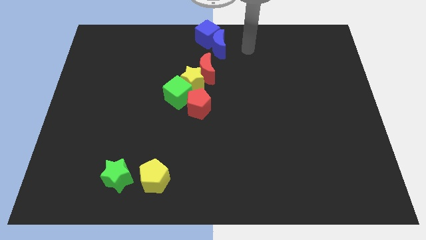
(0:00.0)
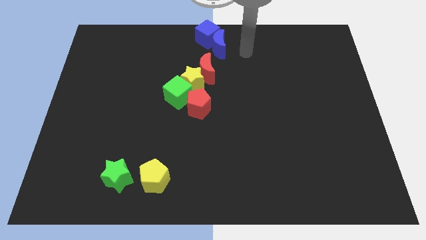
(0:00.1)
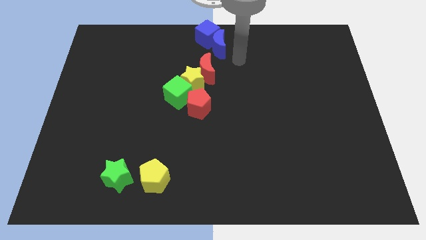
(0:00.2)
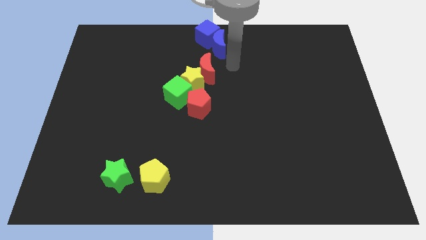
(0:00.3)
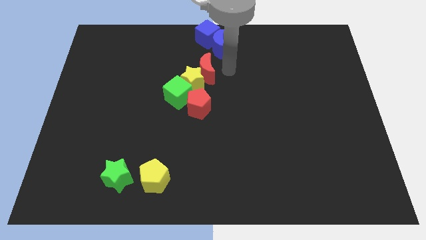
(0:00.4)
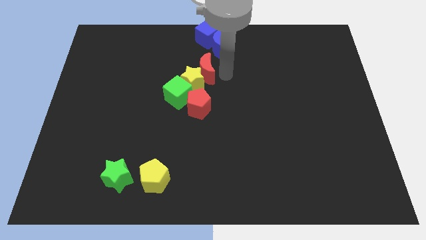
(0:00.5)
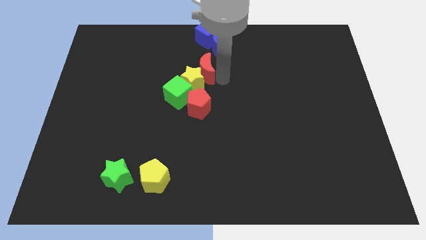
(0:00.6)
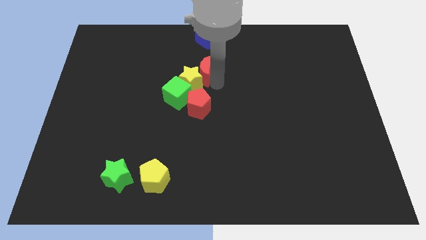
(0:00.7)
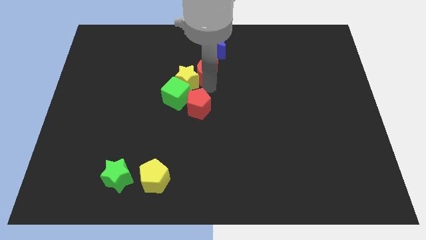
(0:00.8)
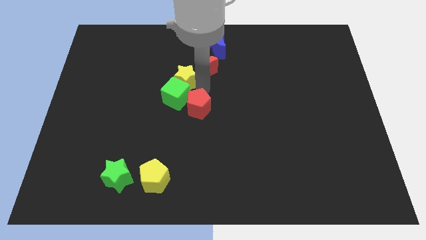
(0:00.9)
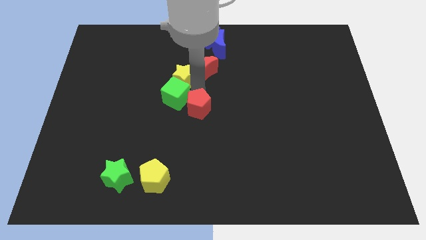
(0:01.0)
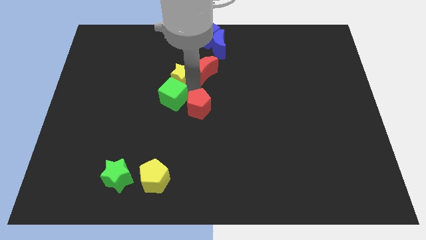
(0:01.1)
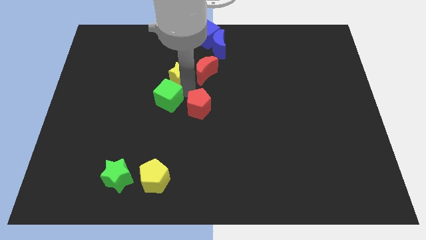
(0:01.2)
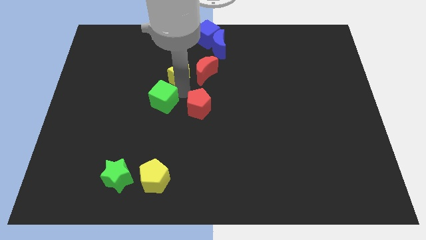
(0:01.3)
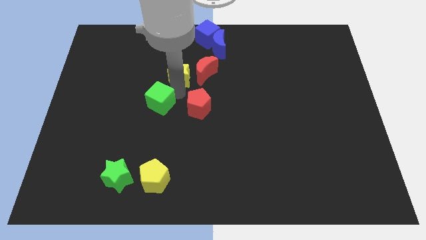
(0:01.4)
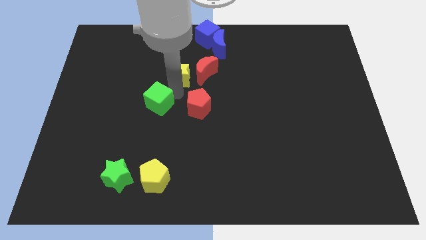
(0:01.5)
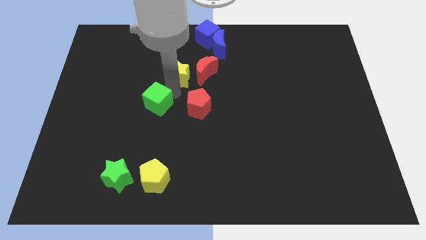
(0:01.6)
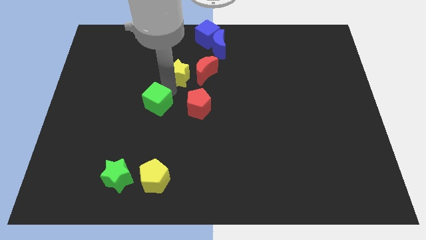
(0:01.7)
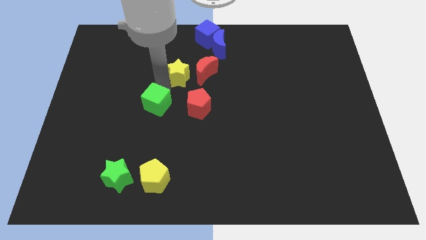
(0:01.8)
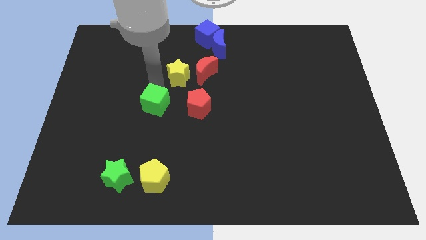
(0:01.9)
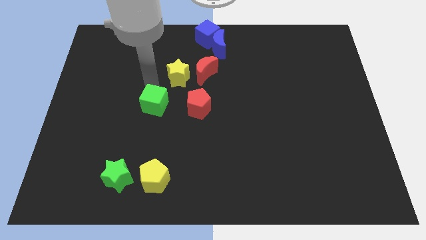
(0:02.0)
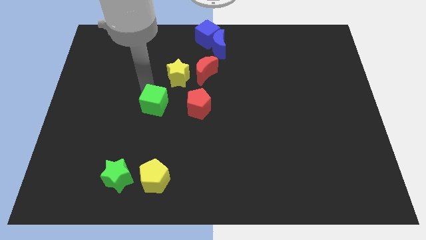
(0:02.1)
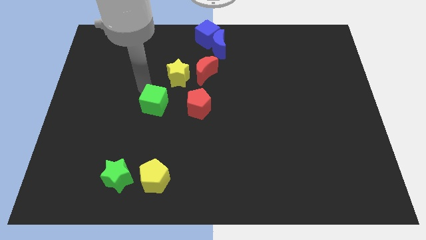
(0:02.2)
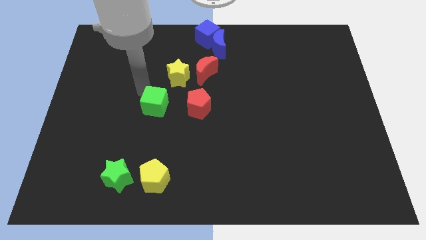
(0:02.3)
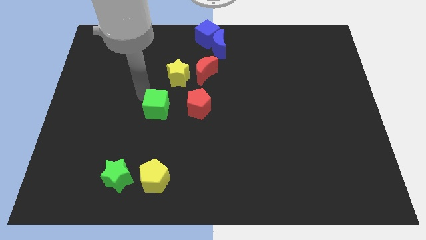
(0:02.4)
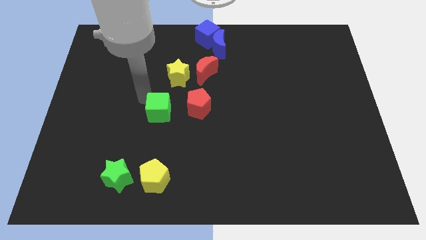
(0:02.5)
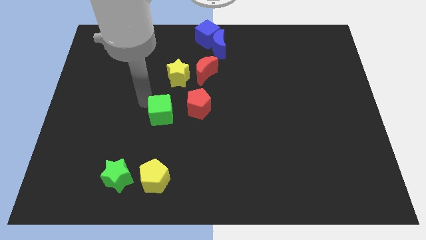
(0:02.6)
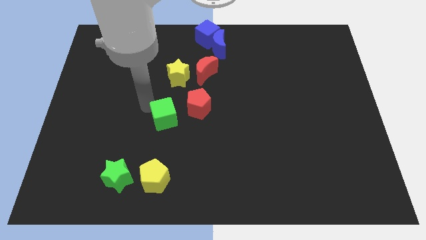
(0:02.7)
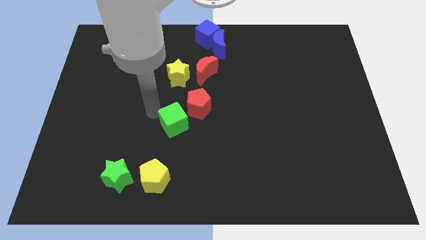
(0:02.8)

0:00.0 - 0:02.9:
separate the yellow star and green cube

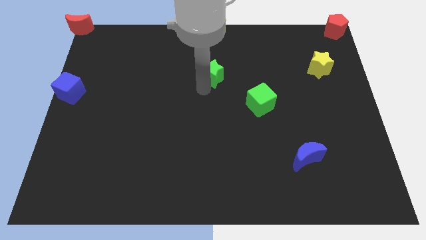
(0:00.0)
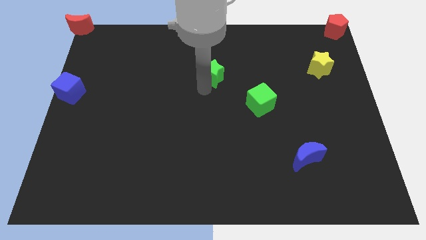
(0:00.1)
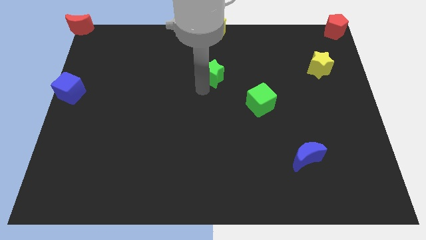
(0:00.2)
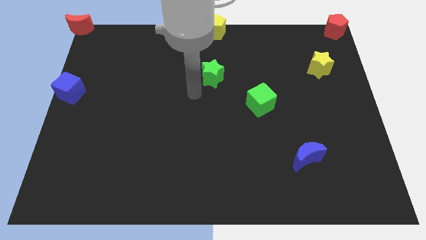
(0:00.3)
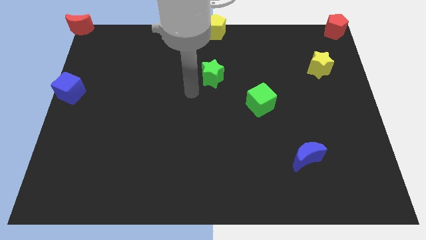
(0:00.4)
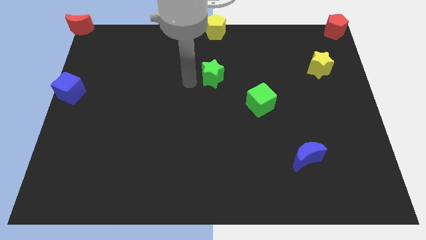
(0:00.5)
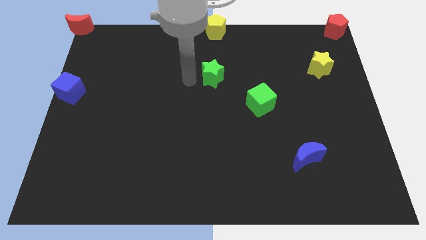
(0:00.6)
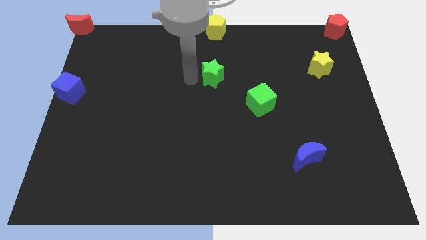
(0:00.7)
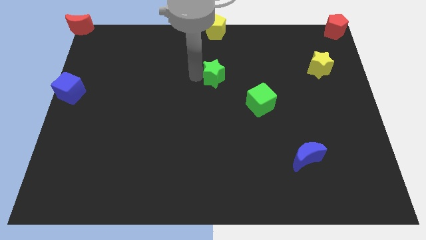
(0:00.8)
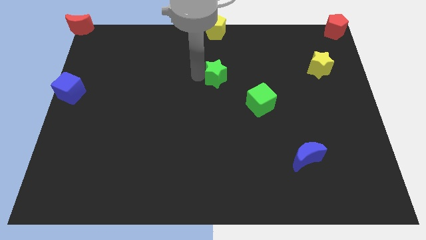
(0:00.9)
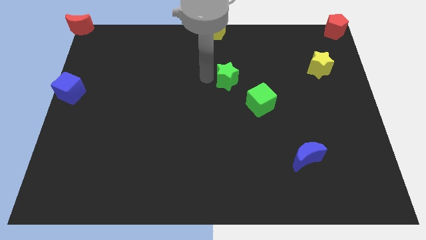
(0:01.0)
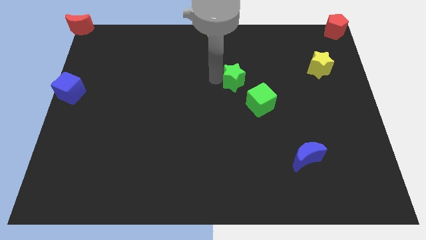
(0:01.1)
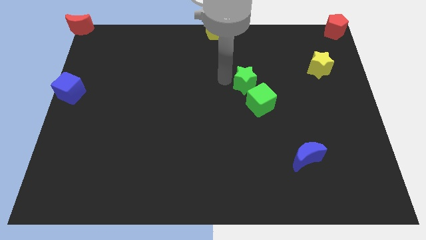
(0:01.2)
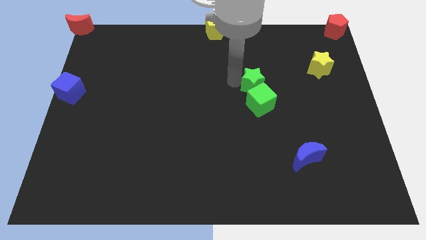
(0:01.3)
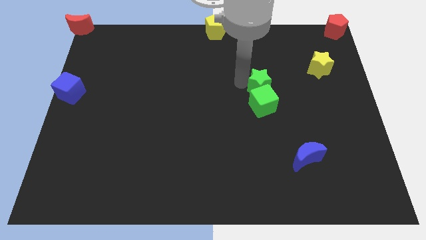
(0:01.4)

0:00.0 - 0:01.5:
push the green star to the top of green cube

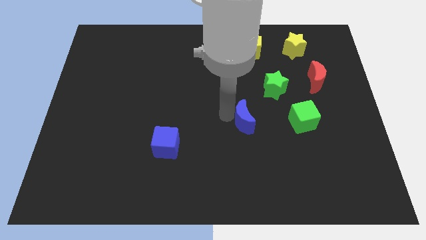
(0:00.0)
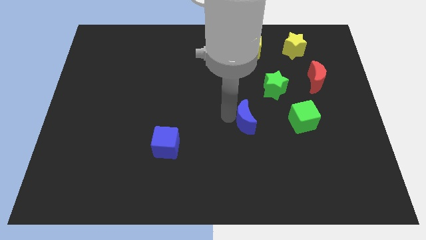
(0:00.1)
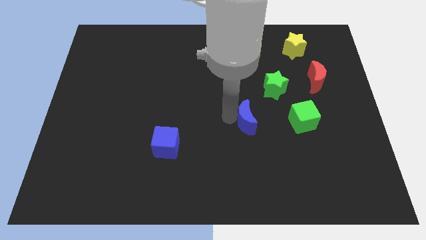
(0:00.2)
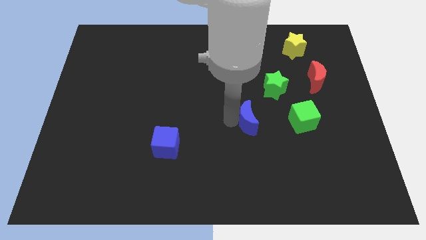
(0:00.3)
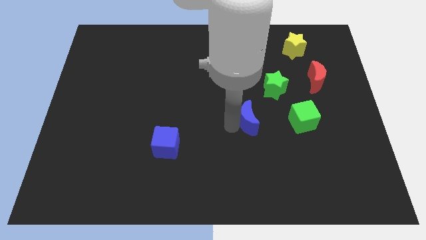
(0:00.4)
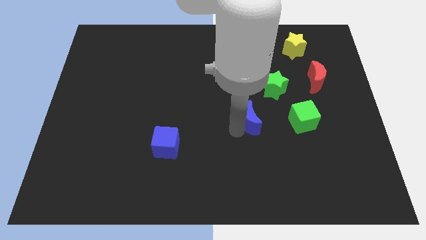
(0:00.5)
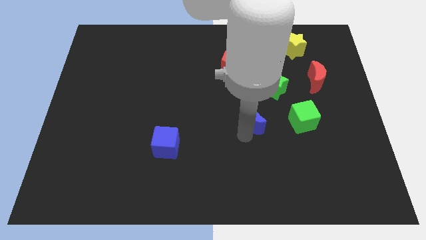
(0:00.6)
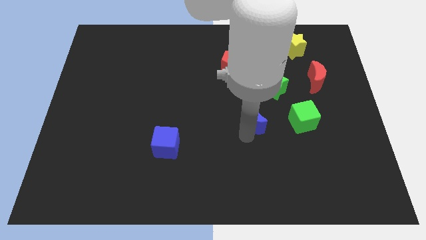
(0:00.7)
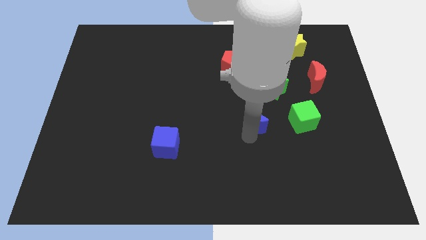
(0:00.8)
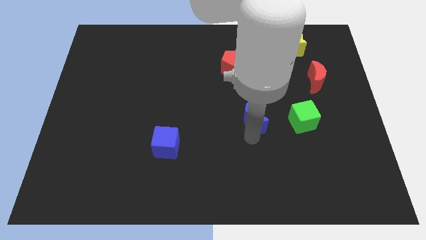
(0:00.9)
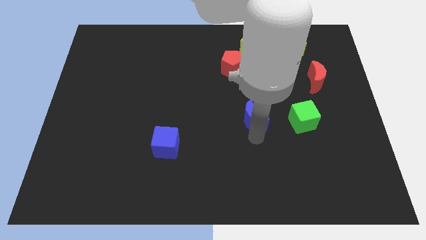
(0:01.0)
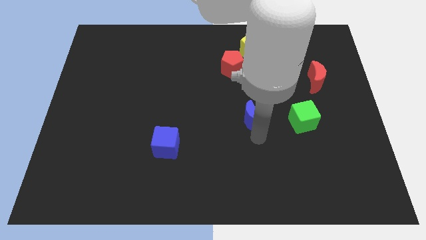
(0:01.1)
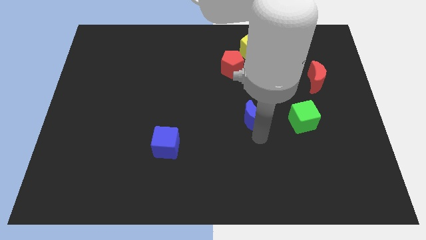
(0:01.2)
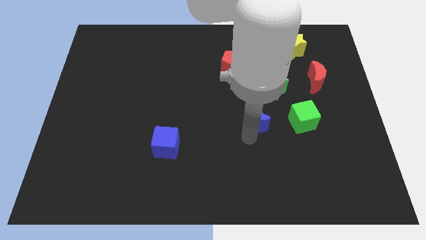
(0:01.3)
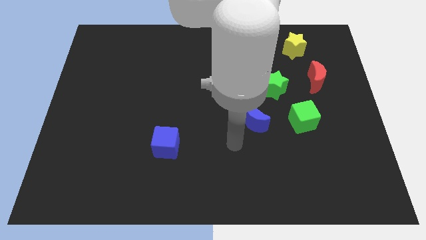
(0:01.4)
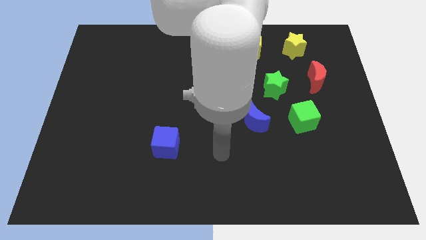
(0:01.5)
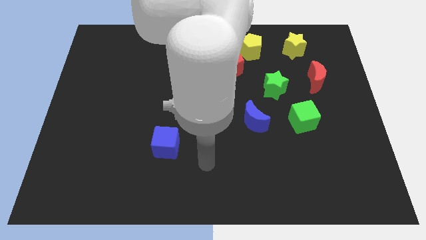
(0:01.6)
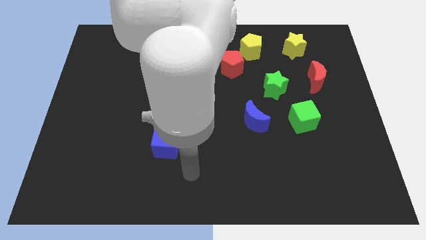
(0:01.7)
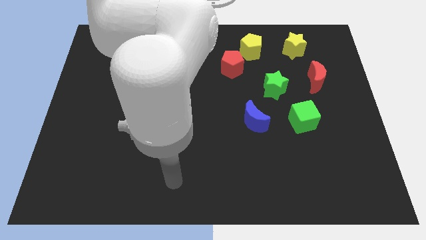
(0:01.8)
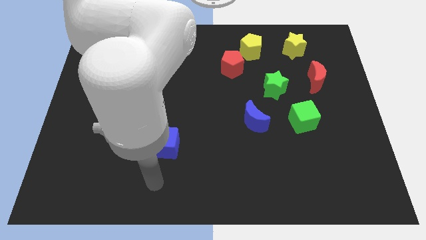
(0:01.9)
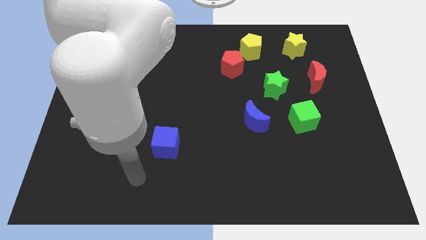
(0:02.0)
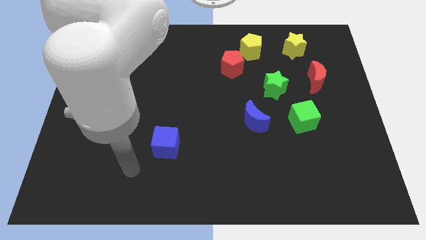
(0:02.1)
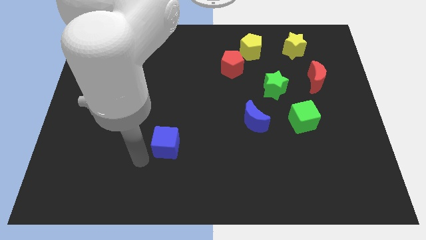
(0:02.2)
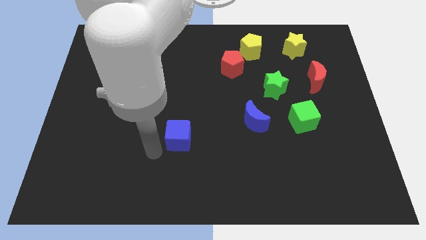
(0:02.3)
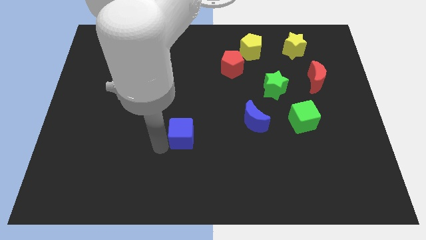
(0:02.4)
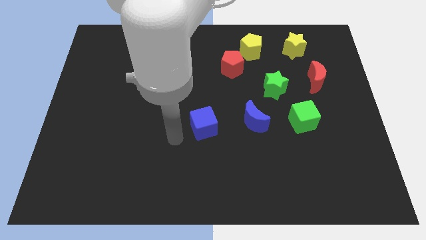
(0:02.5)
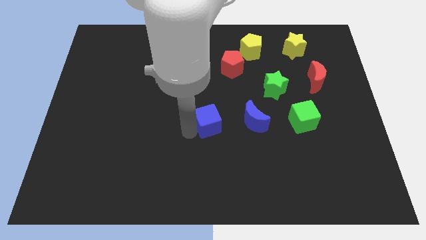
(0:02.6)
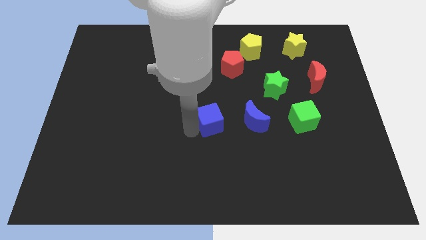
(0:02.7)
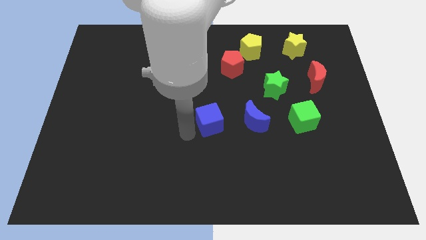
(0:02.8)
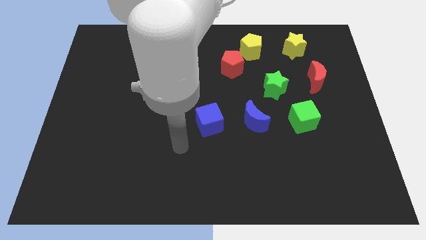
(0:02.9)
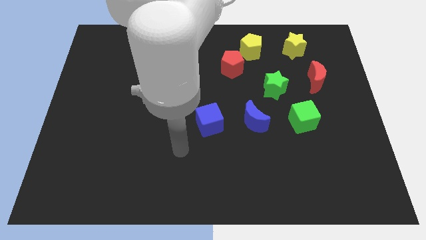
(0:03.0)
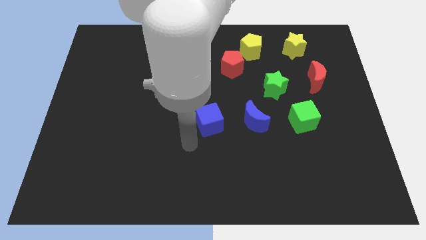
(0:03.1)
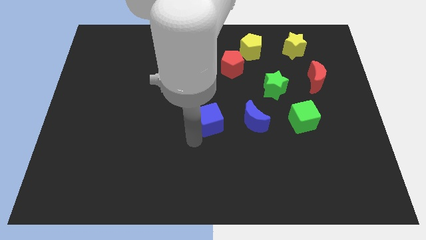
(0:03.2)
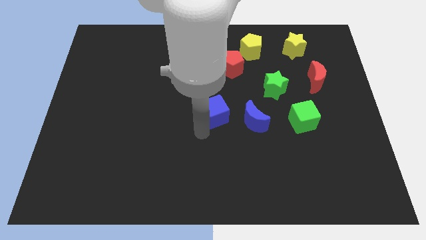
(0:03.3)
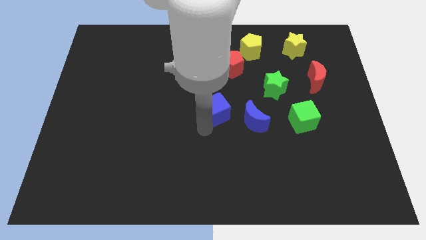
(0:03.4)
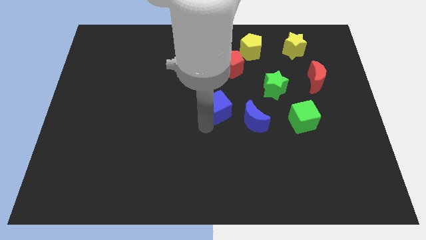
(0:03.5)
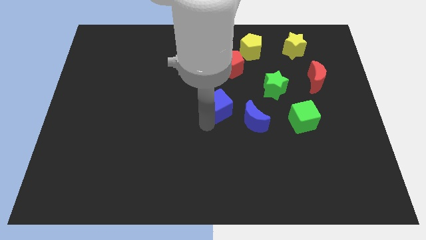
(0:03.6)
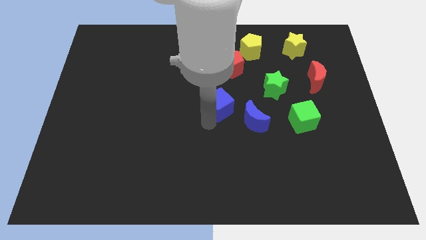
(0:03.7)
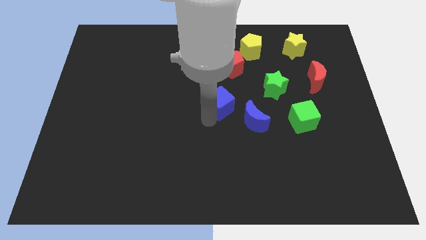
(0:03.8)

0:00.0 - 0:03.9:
move the blue cube parallel to the blue crescent

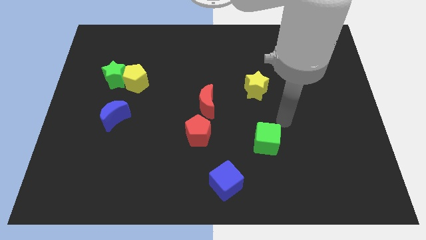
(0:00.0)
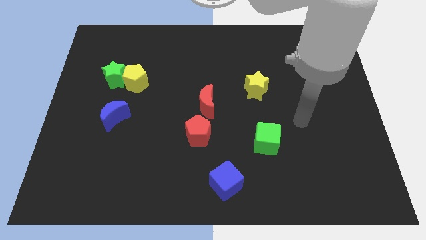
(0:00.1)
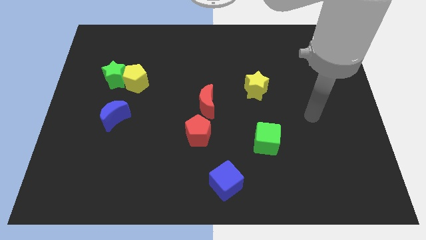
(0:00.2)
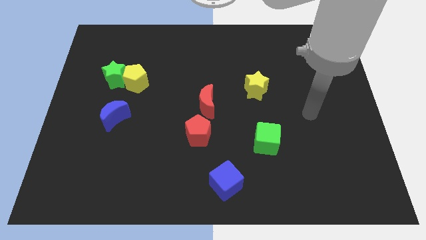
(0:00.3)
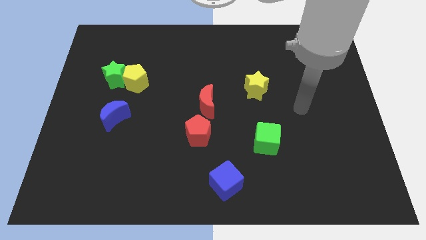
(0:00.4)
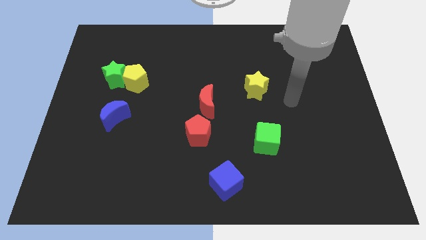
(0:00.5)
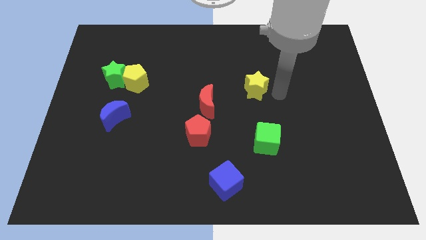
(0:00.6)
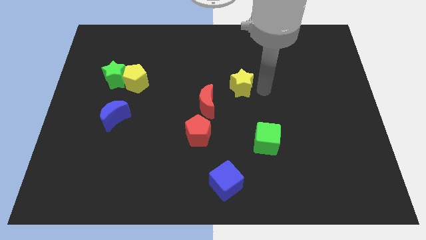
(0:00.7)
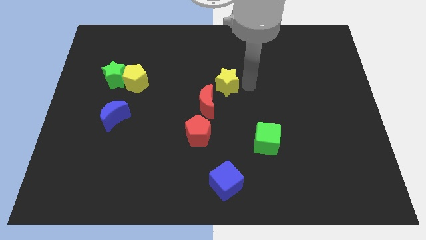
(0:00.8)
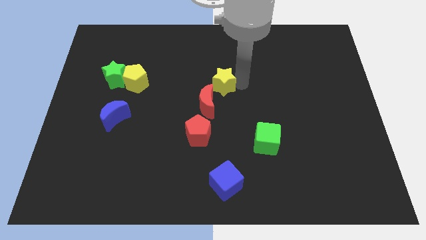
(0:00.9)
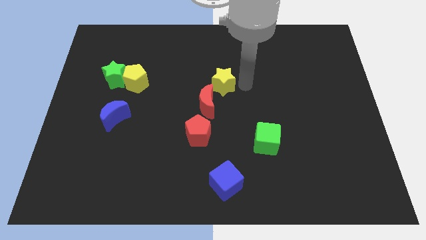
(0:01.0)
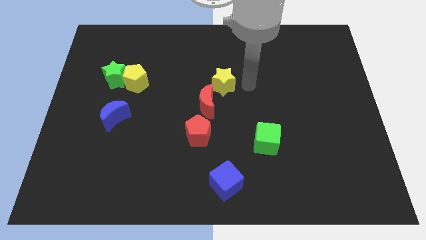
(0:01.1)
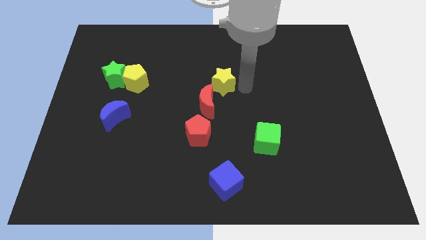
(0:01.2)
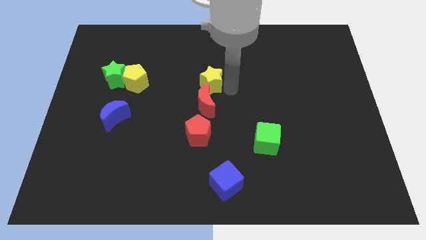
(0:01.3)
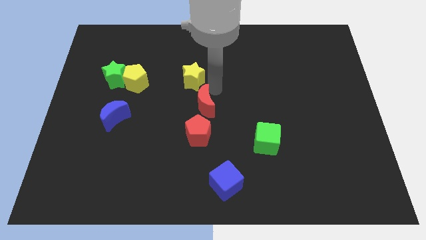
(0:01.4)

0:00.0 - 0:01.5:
move the yellow star into the red crescent
